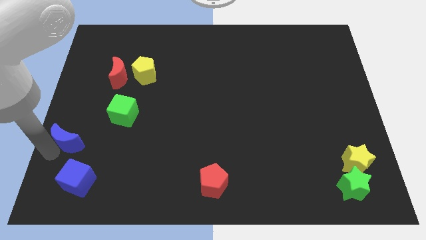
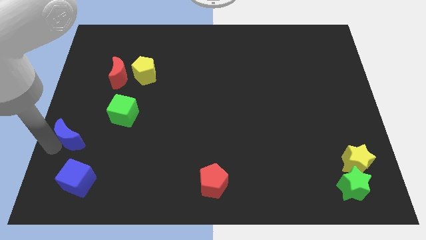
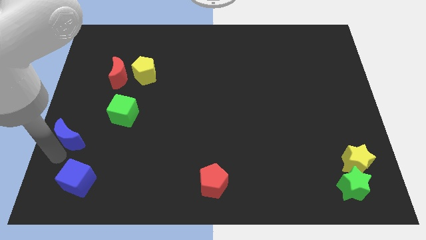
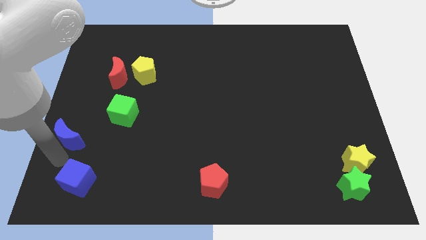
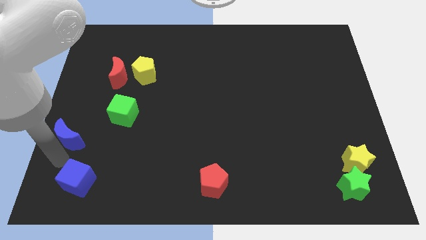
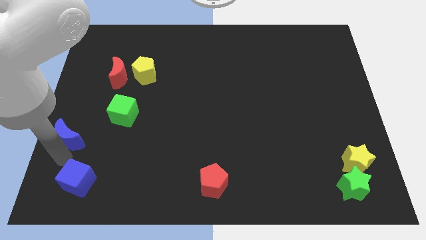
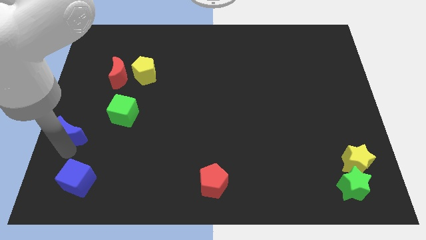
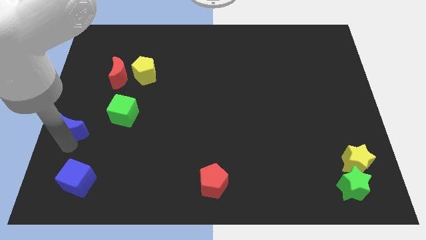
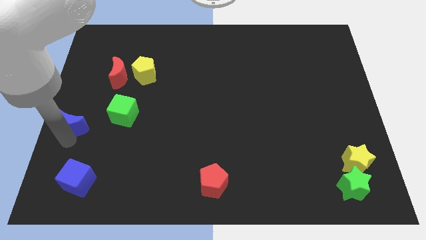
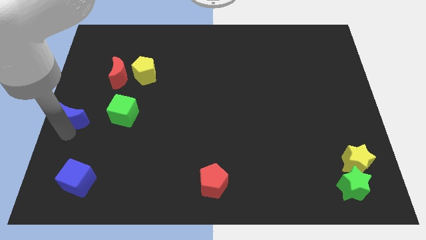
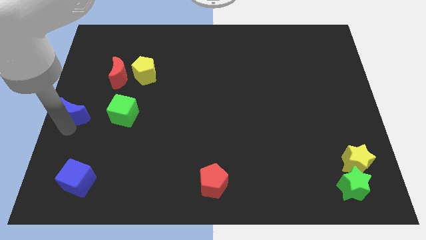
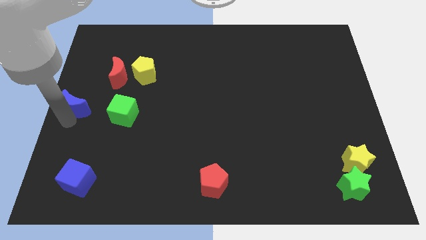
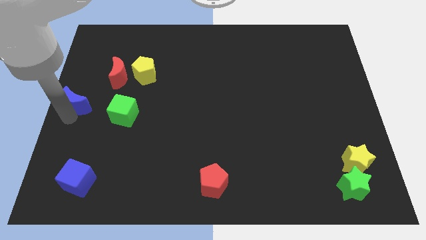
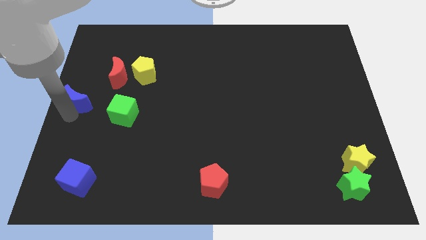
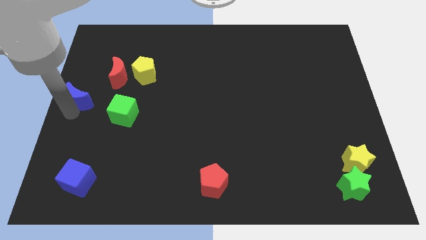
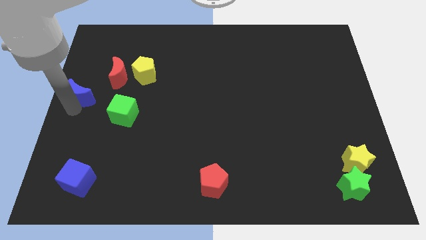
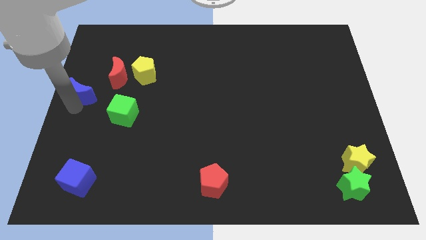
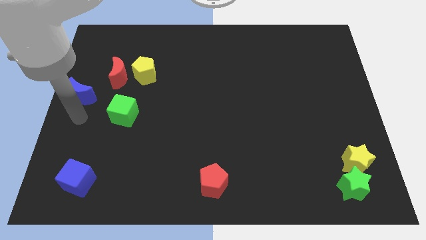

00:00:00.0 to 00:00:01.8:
place the blue crescent to the left of the green cube

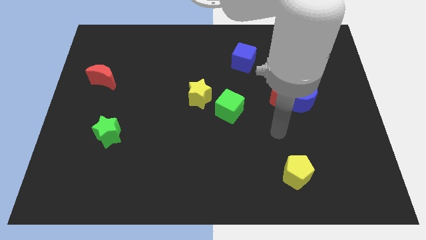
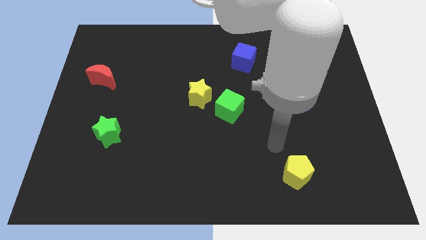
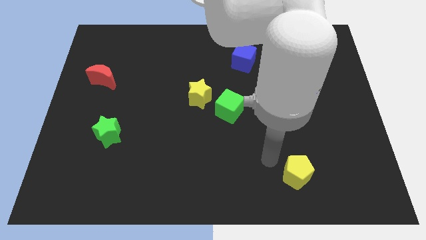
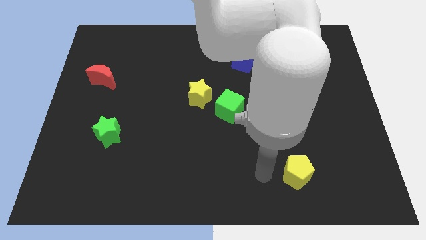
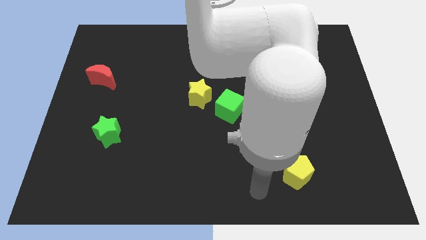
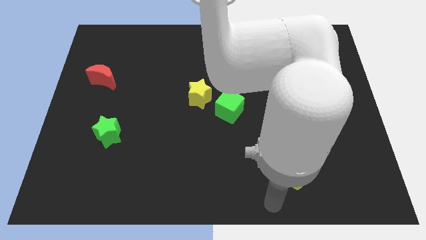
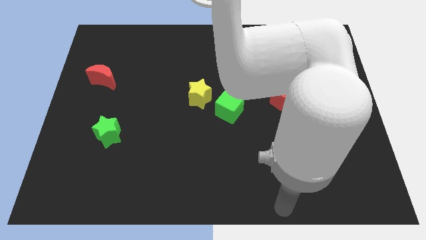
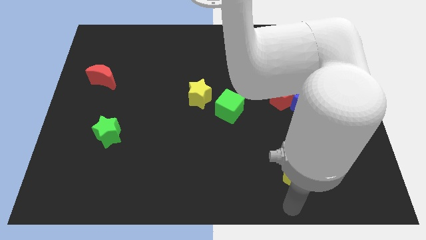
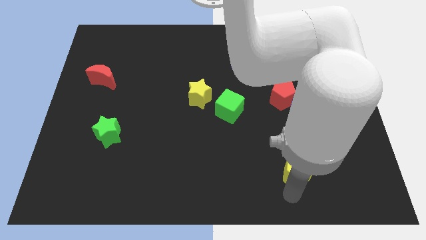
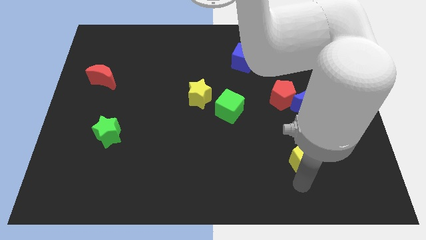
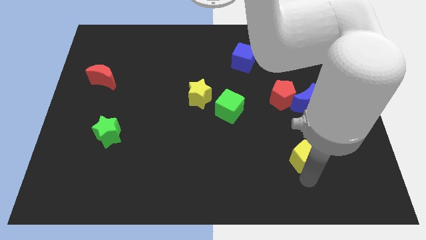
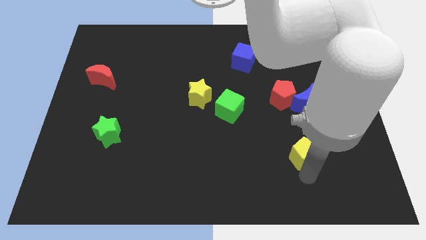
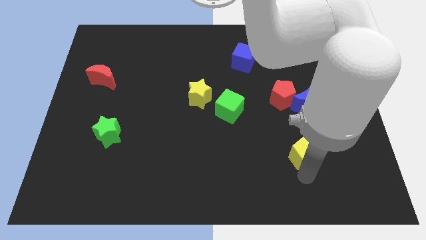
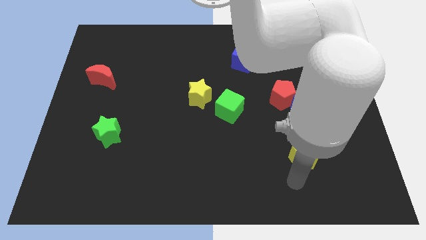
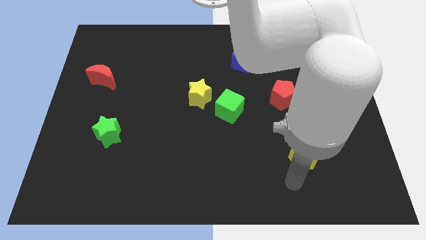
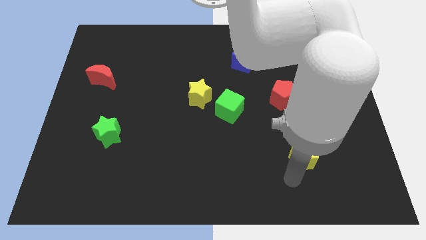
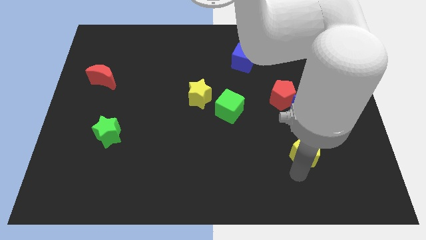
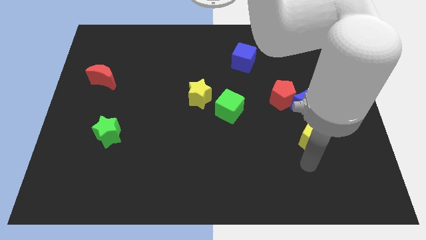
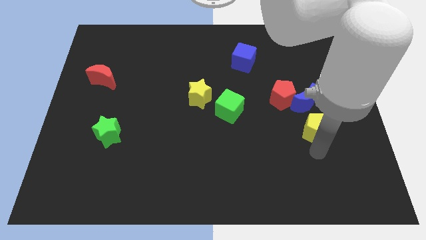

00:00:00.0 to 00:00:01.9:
push the yellow pentagon to the bottom side the blue crescent

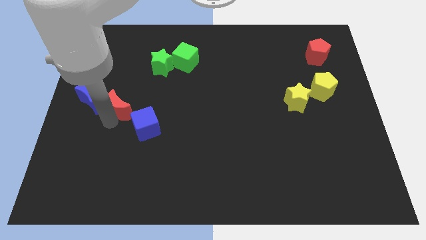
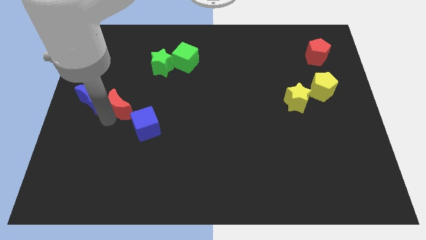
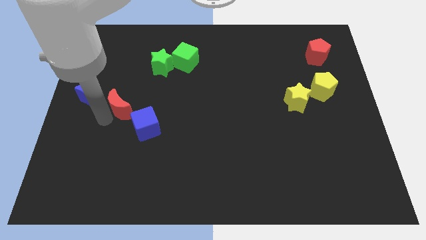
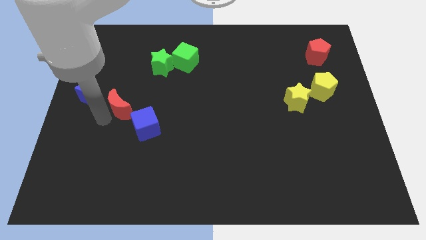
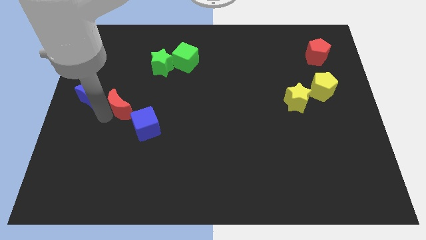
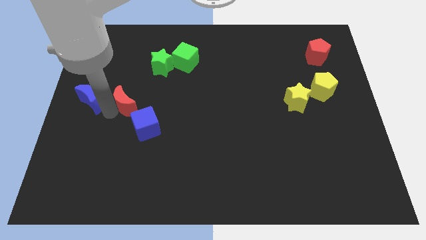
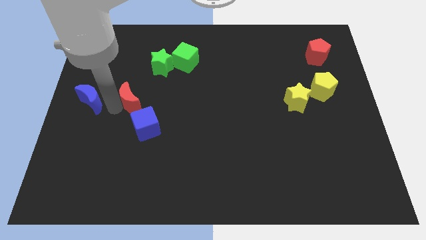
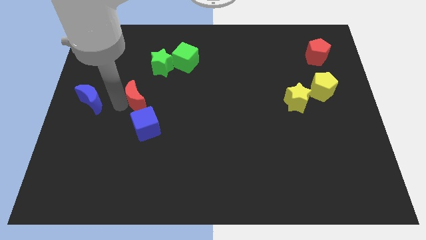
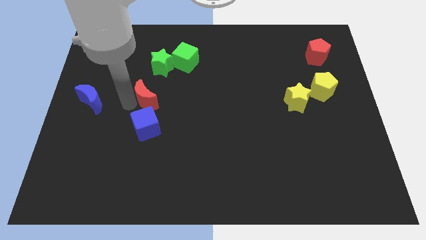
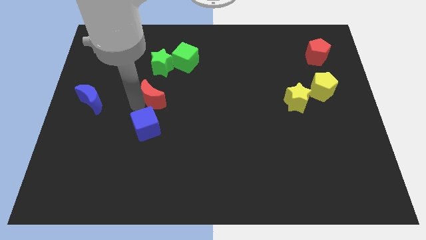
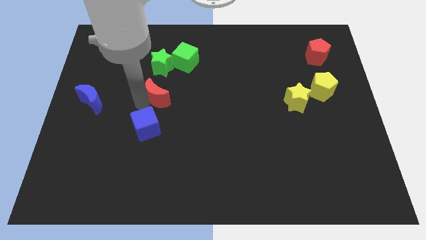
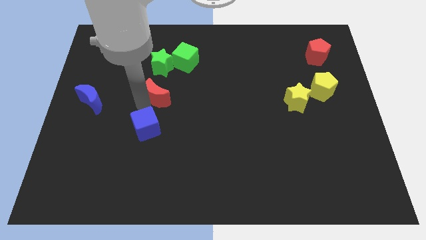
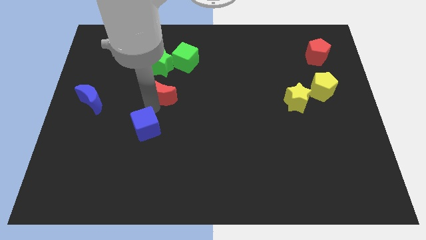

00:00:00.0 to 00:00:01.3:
place the red crescent in between blue cube and green cube

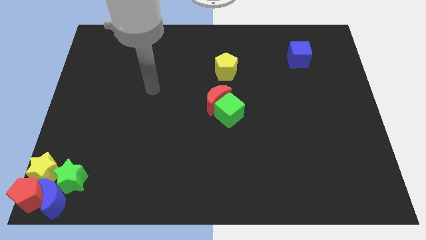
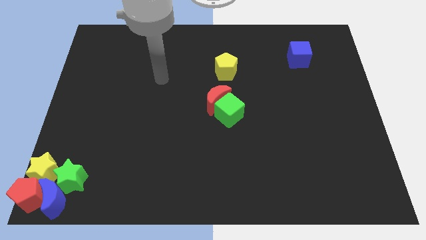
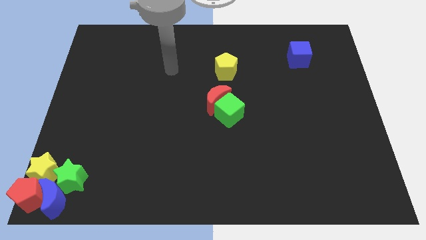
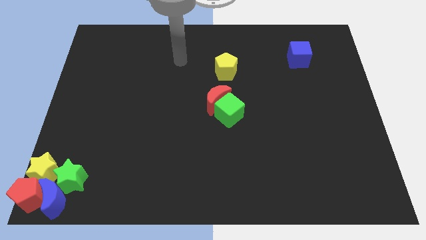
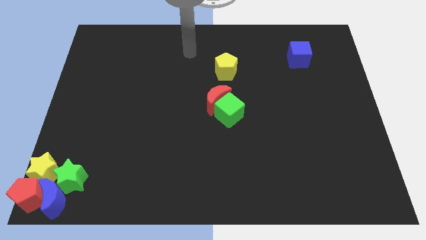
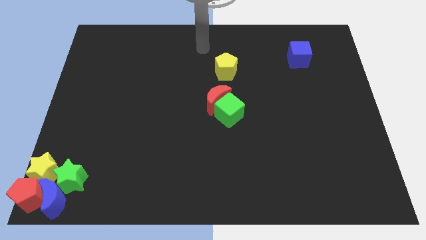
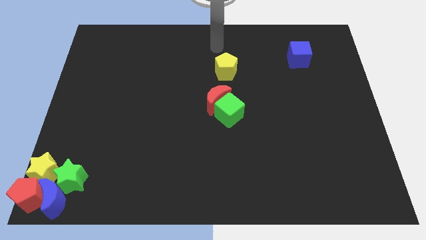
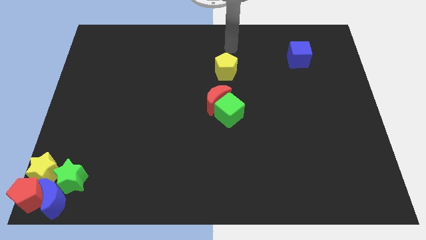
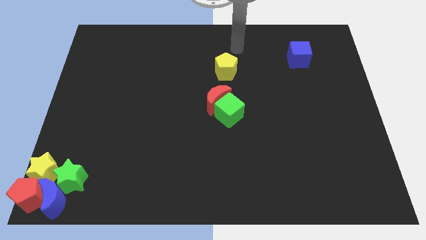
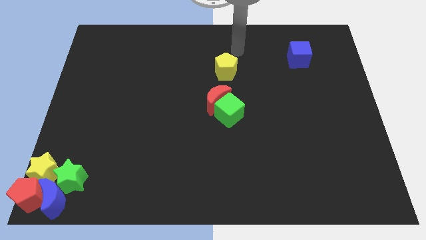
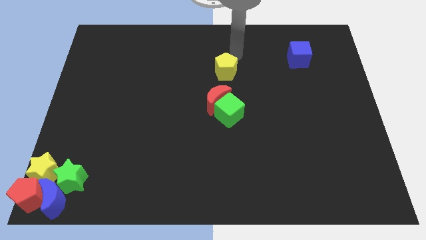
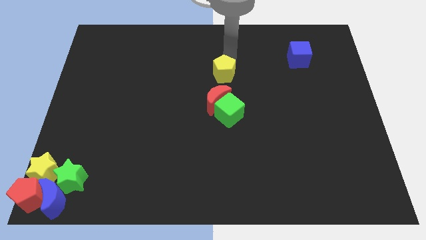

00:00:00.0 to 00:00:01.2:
point your arm above yellow pentagon

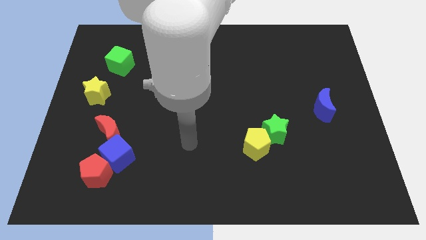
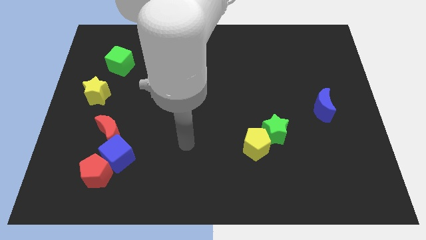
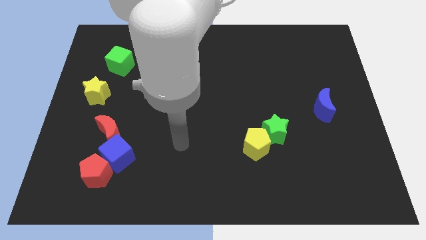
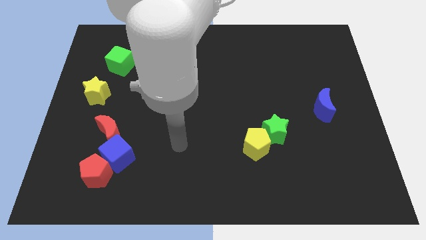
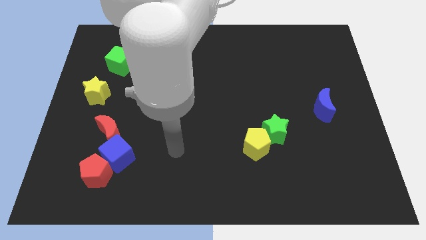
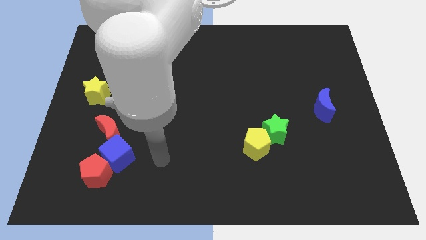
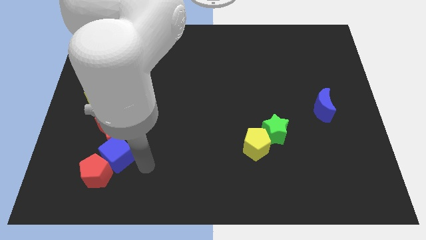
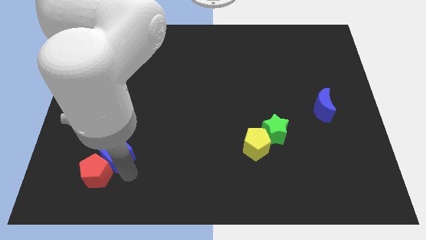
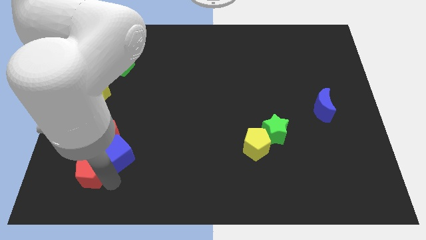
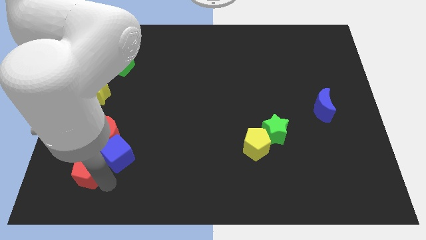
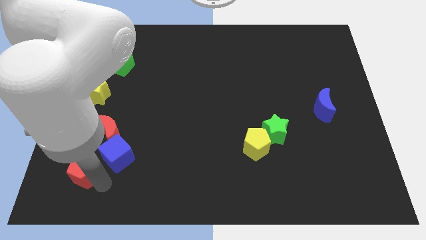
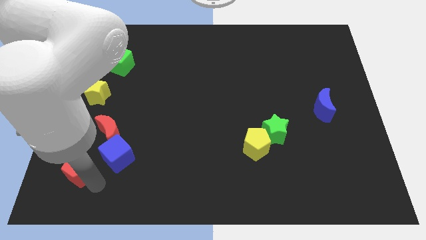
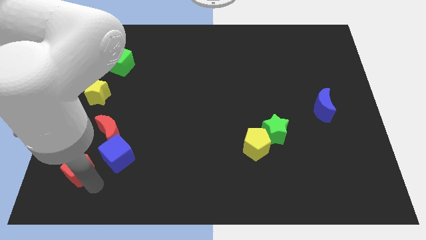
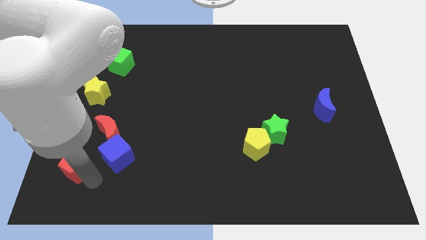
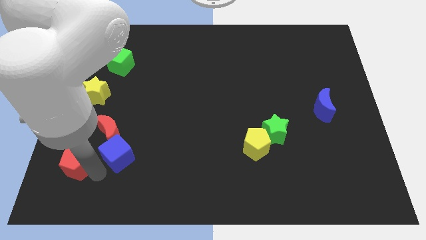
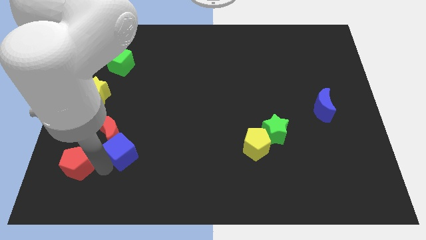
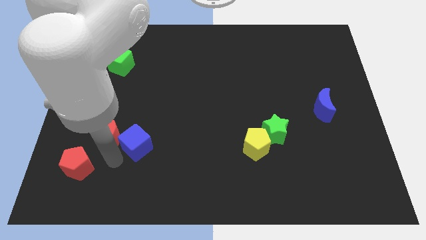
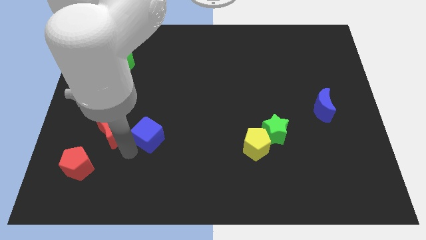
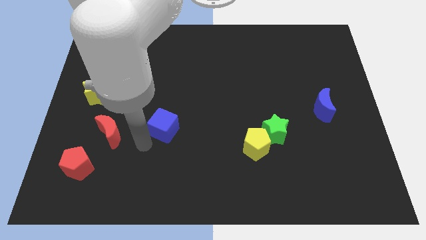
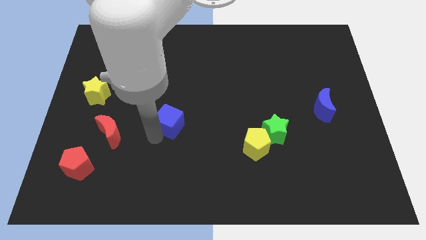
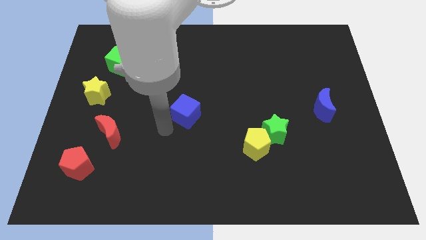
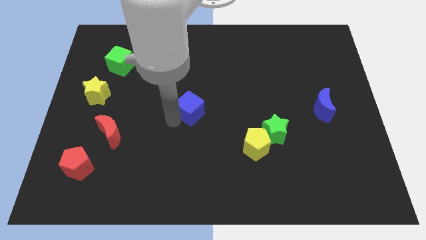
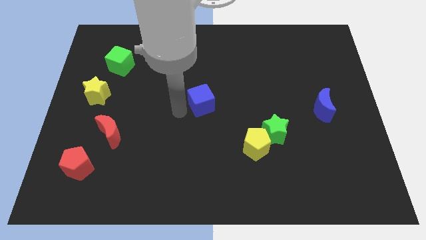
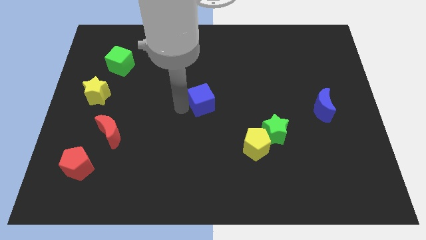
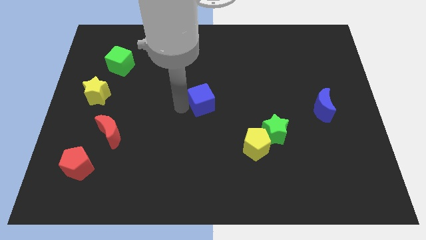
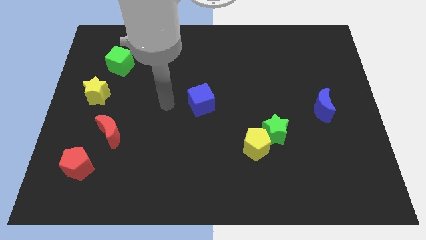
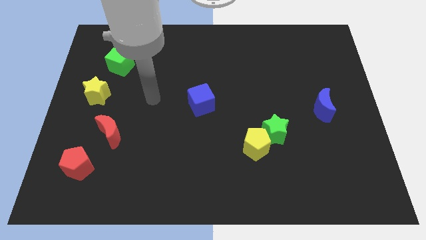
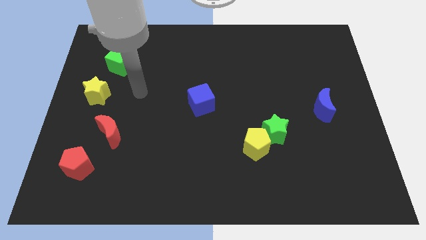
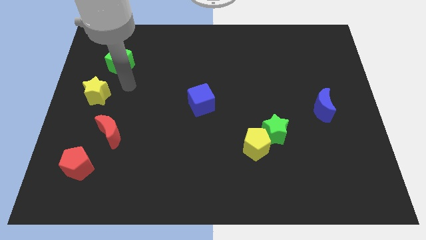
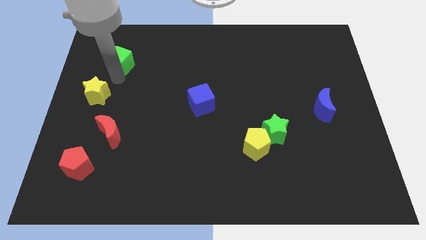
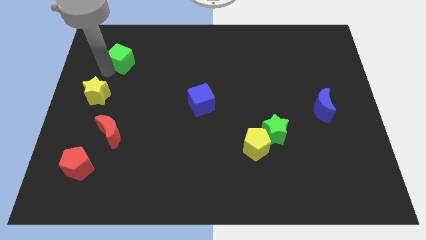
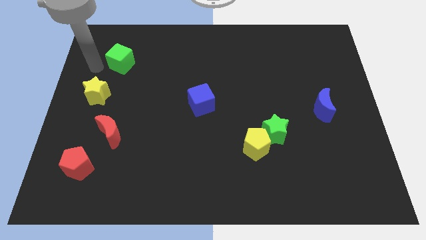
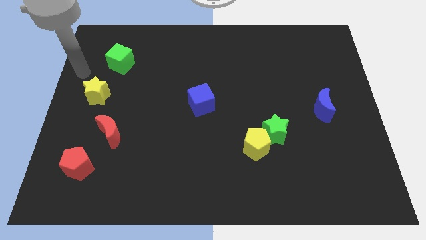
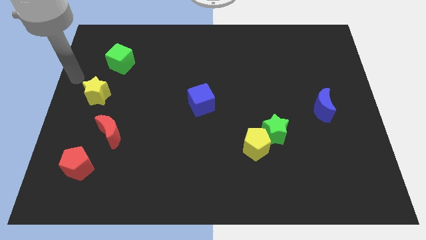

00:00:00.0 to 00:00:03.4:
place the blue cube to the center of the board
